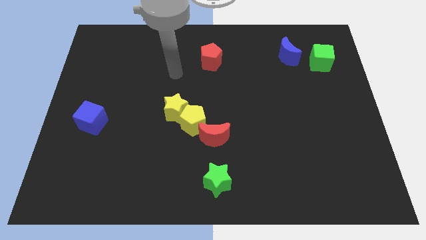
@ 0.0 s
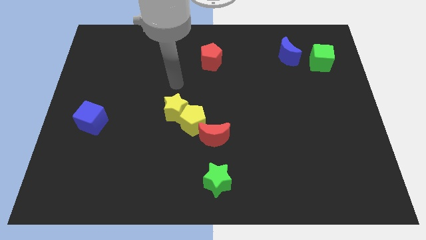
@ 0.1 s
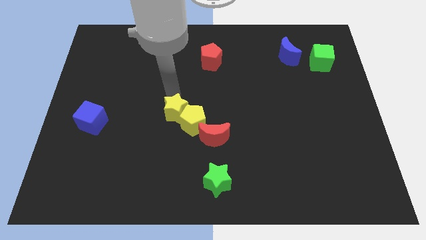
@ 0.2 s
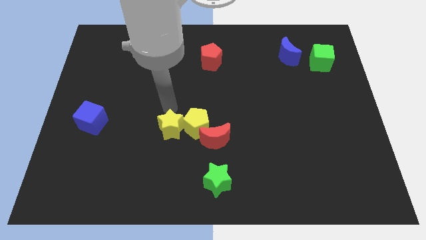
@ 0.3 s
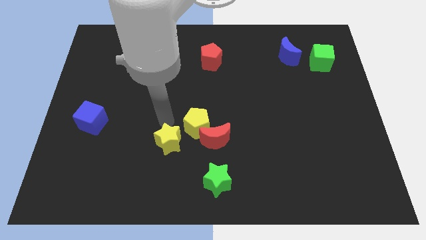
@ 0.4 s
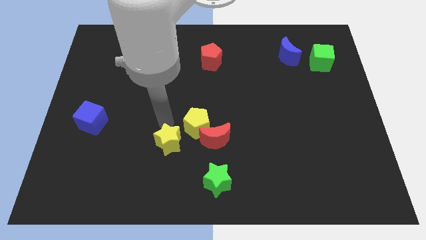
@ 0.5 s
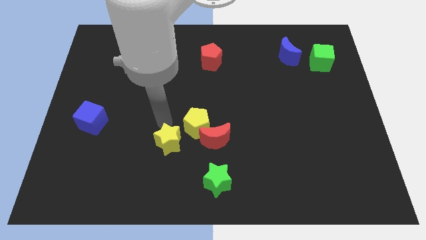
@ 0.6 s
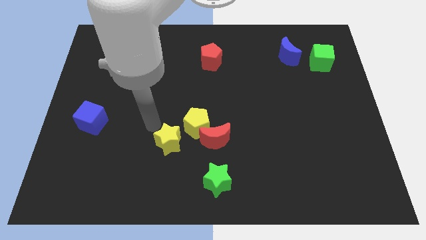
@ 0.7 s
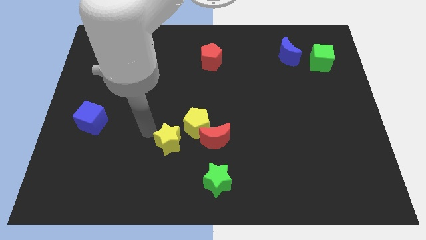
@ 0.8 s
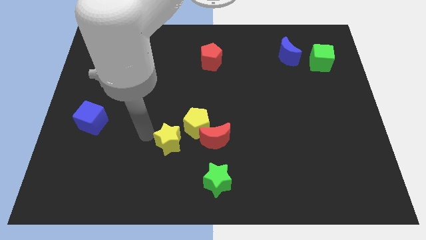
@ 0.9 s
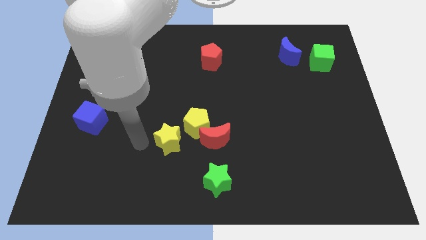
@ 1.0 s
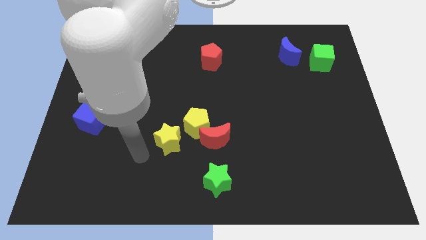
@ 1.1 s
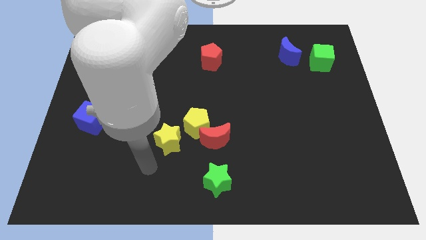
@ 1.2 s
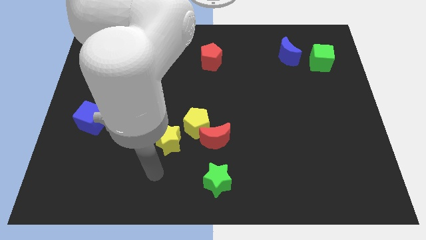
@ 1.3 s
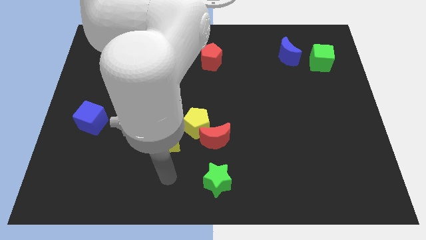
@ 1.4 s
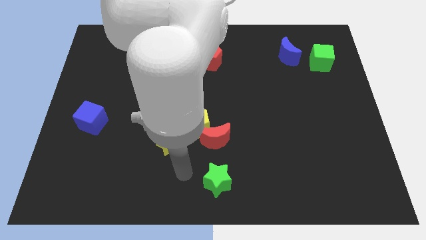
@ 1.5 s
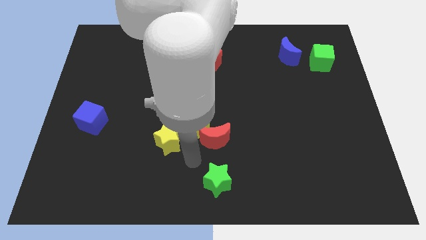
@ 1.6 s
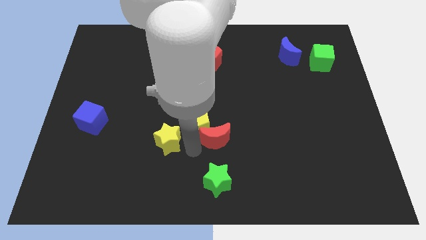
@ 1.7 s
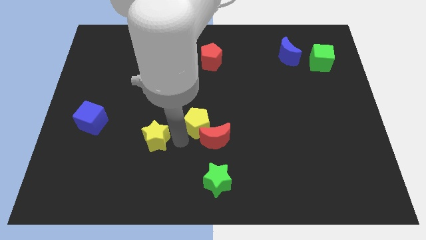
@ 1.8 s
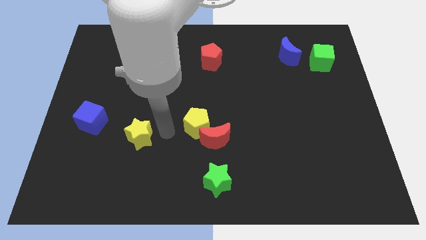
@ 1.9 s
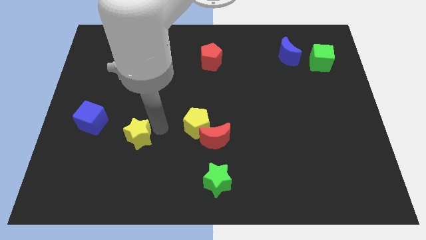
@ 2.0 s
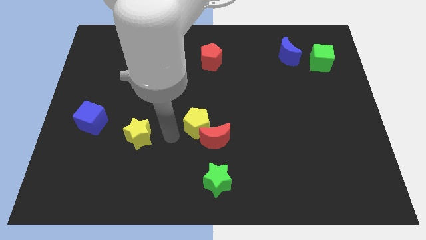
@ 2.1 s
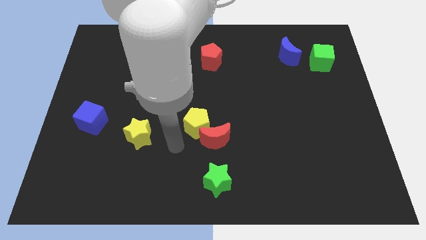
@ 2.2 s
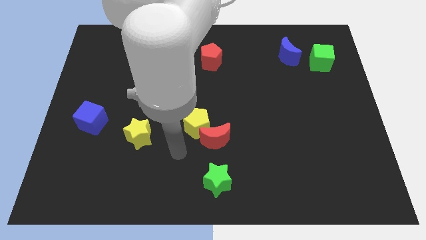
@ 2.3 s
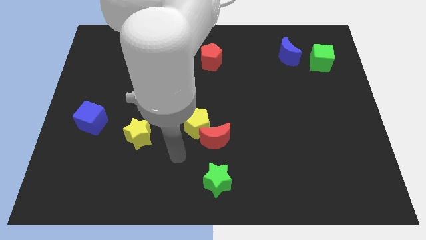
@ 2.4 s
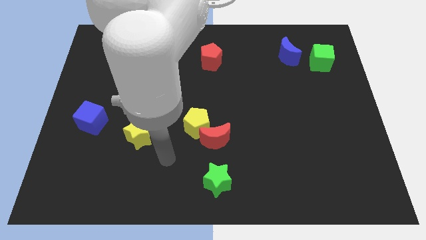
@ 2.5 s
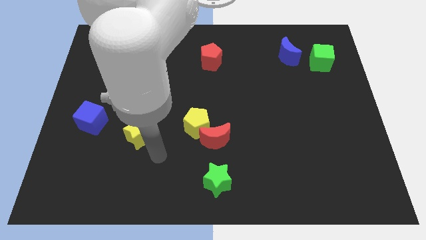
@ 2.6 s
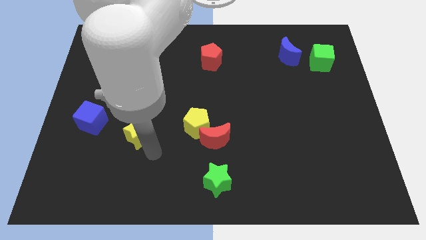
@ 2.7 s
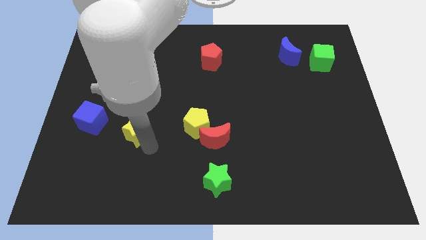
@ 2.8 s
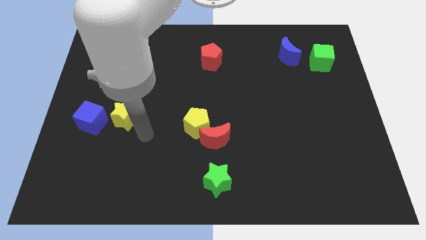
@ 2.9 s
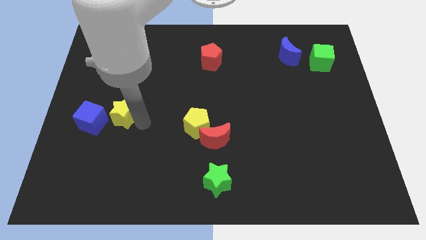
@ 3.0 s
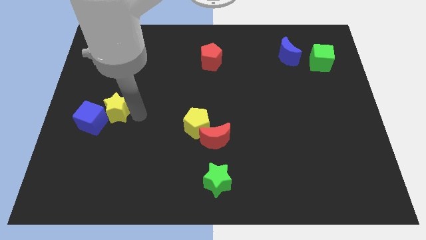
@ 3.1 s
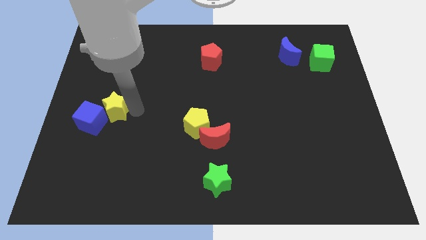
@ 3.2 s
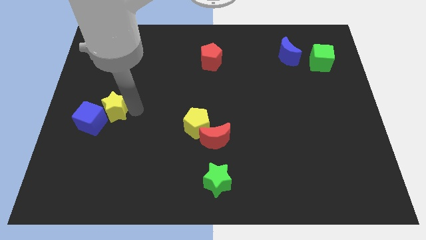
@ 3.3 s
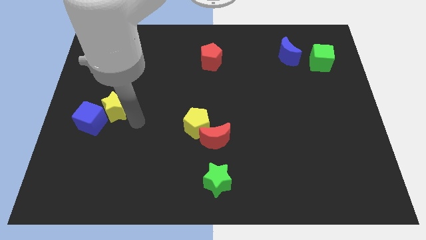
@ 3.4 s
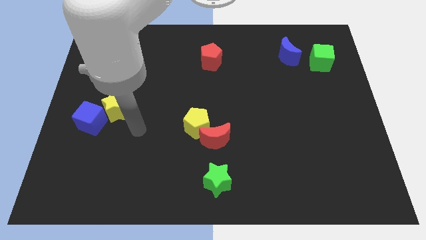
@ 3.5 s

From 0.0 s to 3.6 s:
move the yellow star to the top right of the blue cube

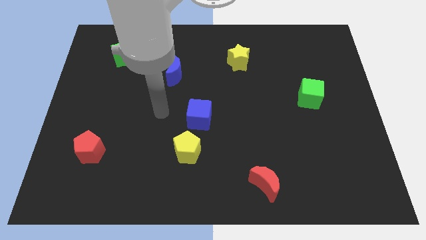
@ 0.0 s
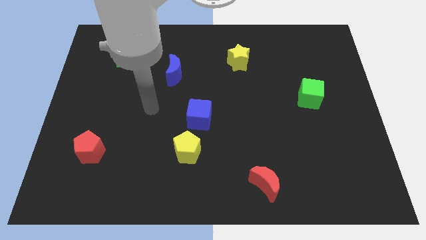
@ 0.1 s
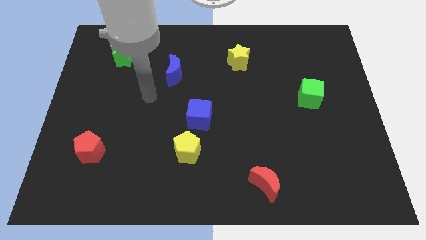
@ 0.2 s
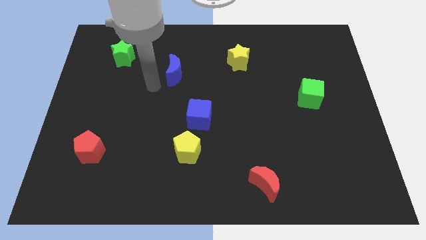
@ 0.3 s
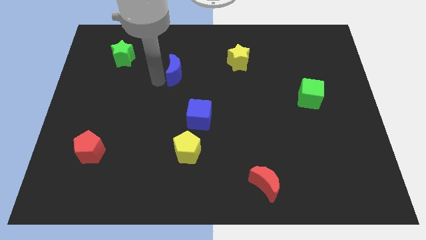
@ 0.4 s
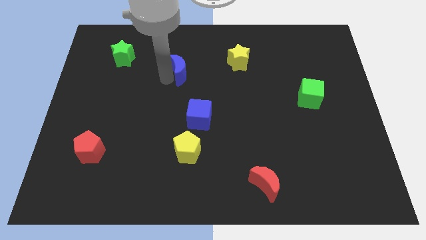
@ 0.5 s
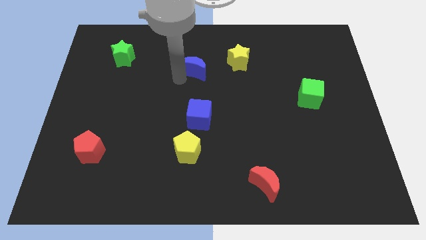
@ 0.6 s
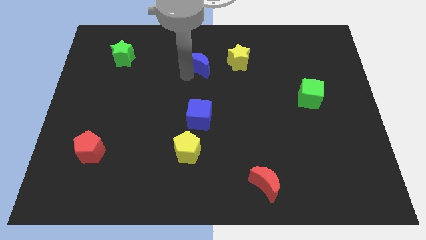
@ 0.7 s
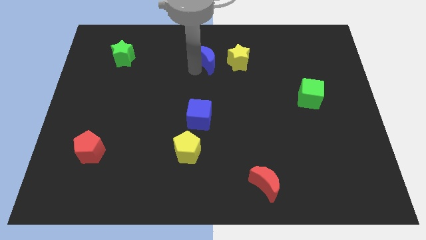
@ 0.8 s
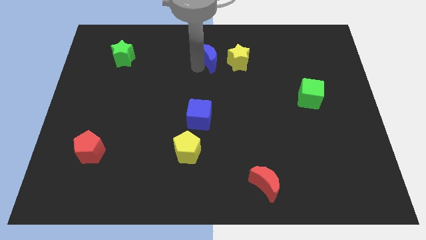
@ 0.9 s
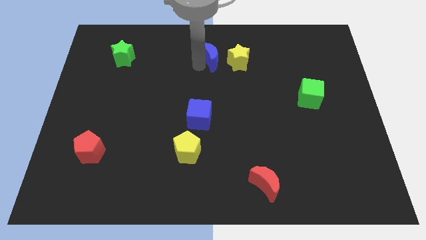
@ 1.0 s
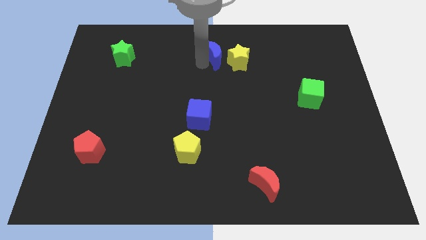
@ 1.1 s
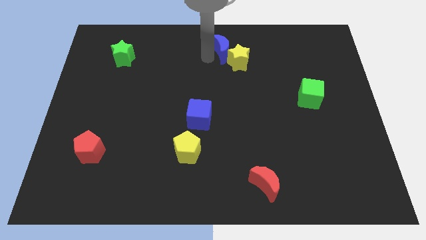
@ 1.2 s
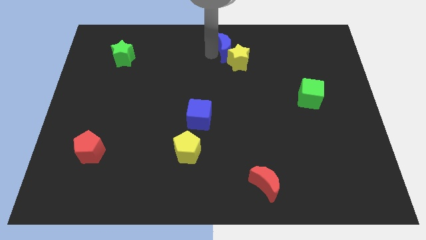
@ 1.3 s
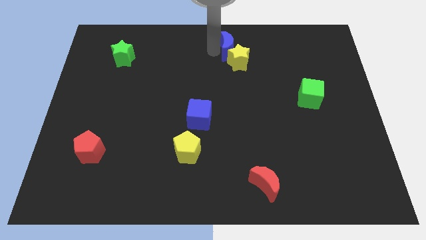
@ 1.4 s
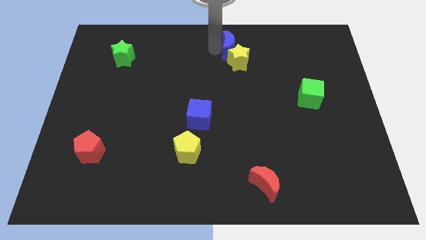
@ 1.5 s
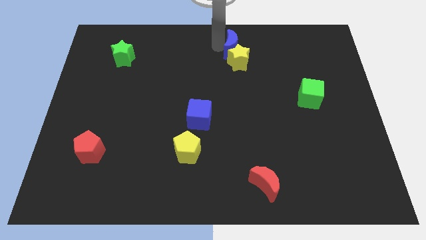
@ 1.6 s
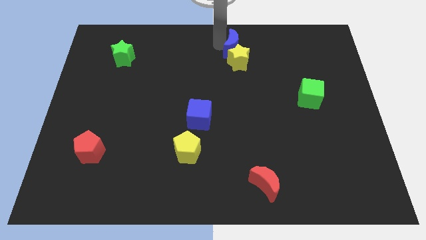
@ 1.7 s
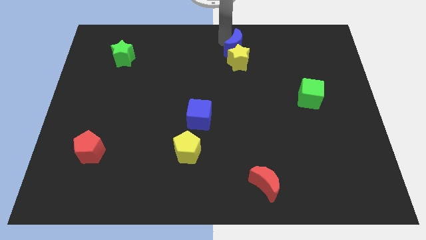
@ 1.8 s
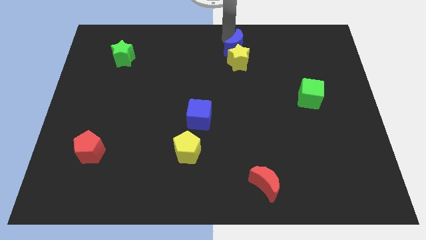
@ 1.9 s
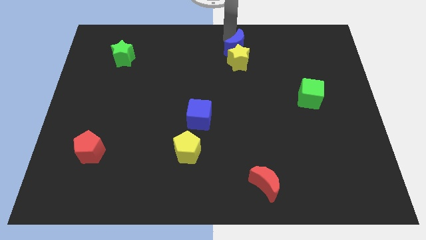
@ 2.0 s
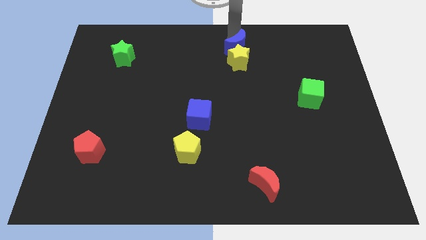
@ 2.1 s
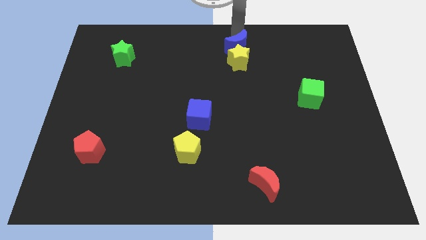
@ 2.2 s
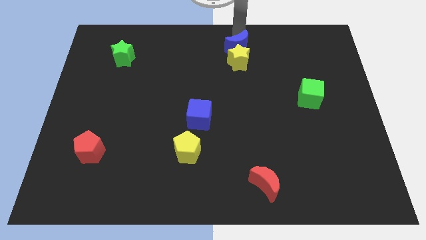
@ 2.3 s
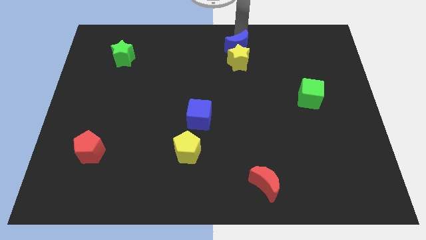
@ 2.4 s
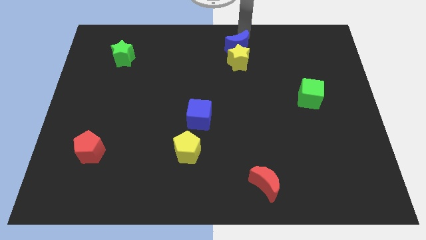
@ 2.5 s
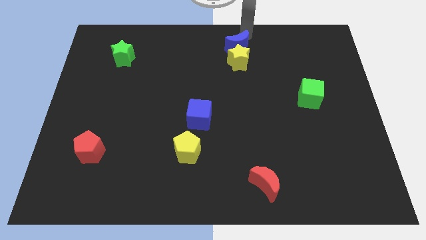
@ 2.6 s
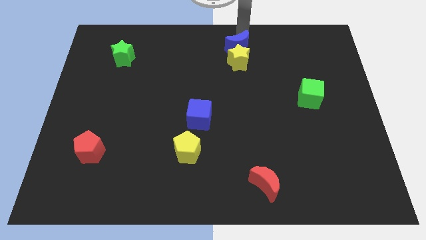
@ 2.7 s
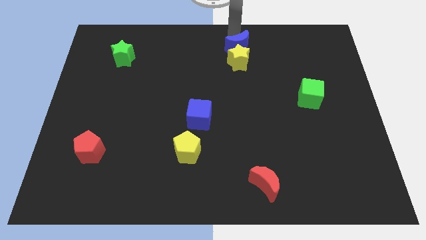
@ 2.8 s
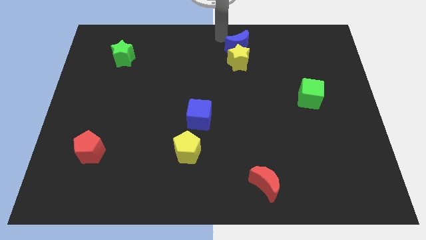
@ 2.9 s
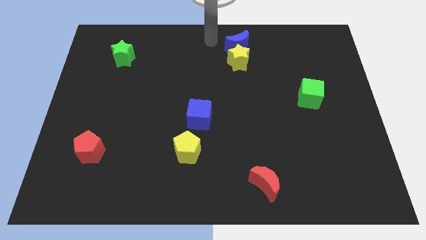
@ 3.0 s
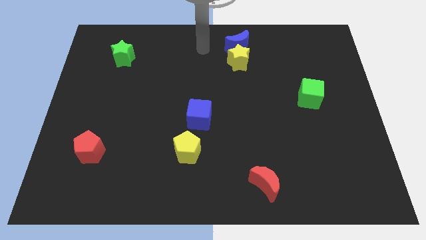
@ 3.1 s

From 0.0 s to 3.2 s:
put the blue moon at the top side of the yellow star

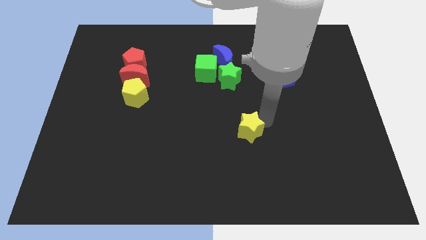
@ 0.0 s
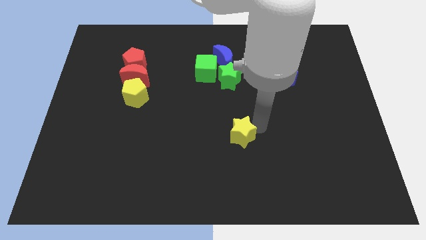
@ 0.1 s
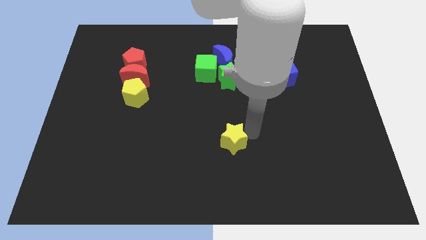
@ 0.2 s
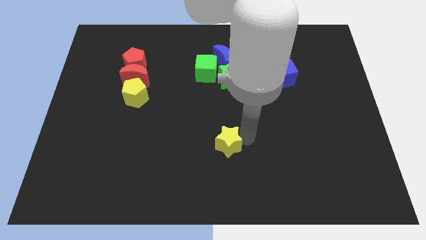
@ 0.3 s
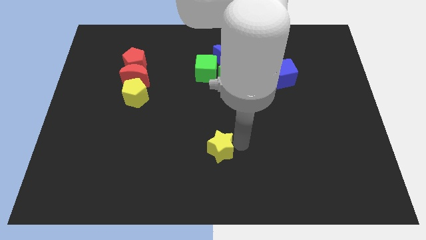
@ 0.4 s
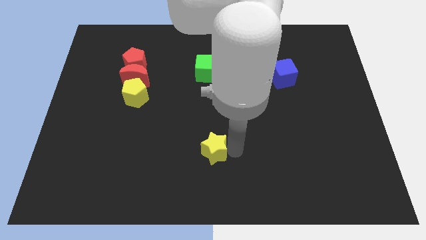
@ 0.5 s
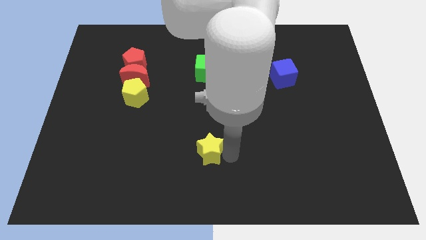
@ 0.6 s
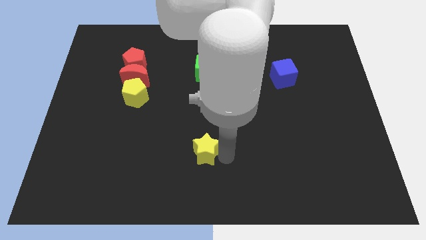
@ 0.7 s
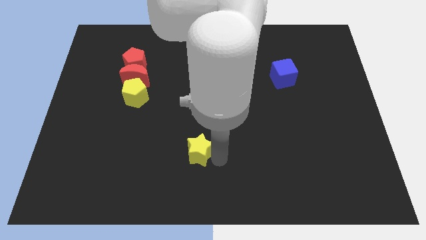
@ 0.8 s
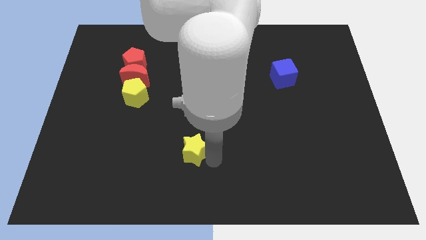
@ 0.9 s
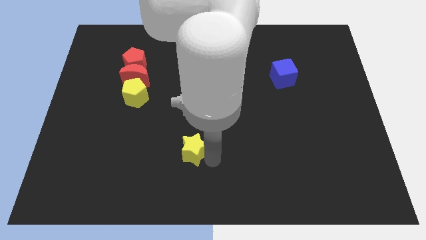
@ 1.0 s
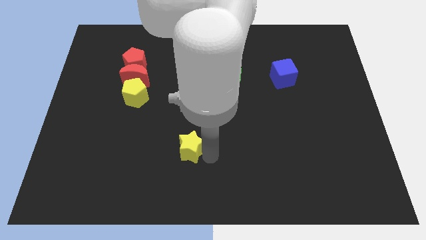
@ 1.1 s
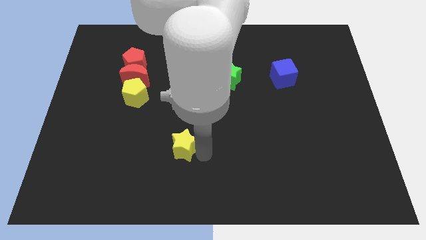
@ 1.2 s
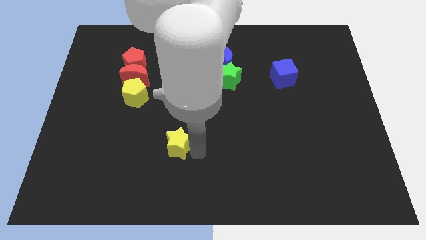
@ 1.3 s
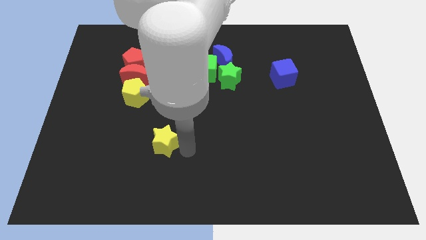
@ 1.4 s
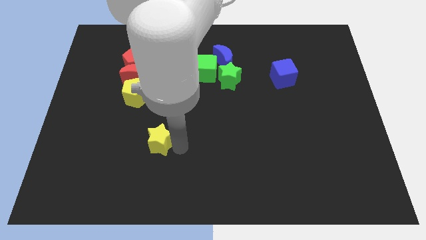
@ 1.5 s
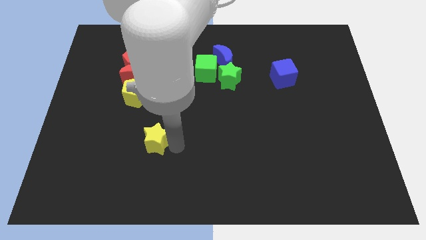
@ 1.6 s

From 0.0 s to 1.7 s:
push the yellow star towards the yellow pentagon

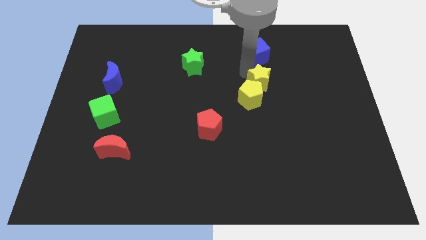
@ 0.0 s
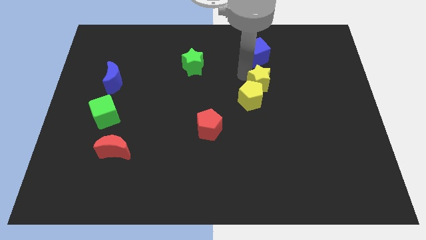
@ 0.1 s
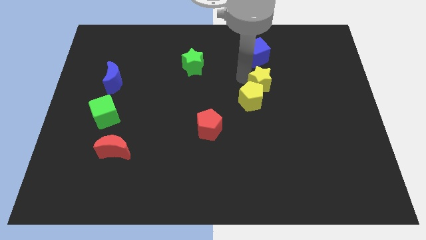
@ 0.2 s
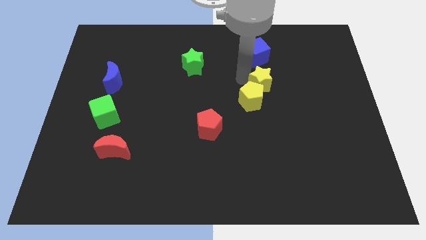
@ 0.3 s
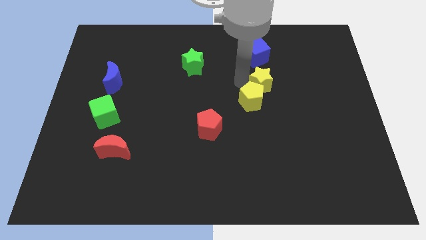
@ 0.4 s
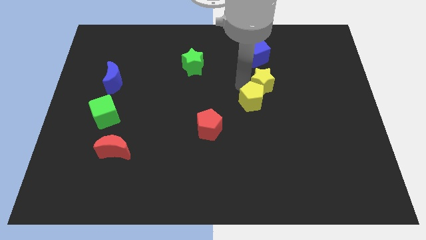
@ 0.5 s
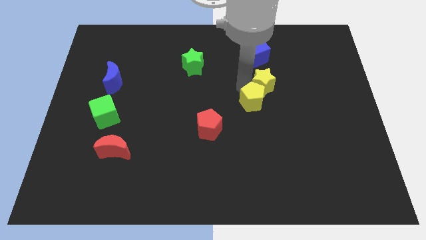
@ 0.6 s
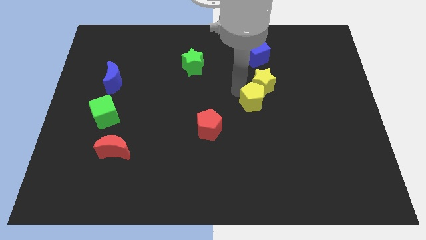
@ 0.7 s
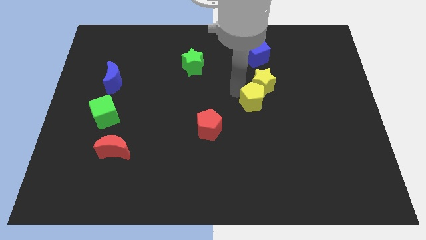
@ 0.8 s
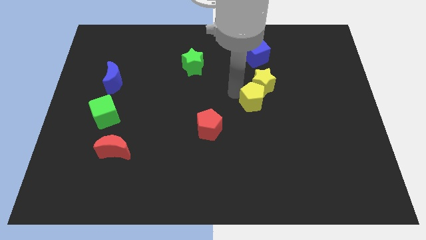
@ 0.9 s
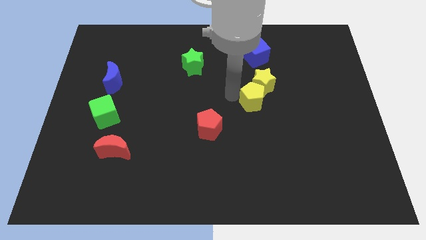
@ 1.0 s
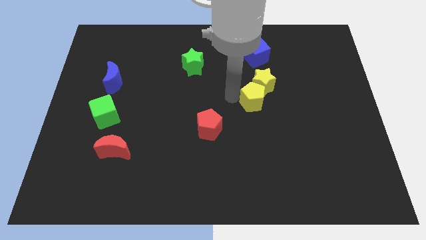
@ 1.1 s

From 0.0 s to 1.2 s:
slide the yellow blocks downward
